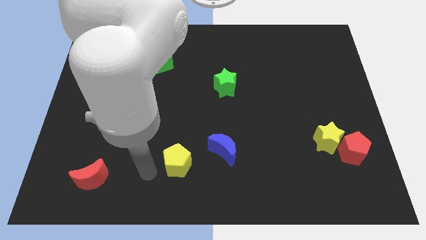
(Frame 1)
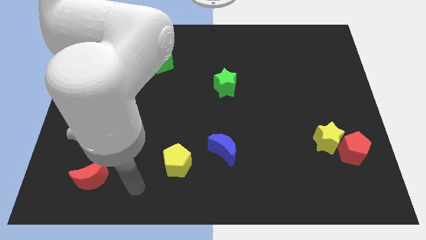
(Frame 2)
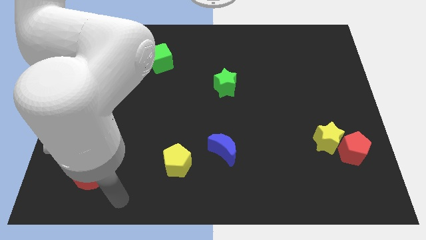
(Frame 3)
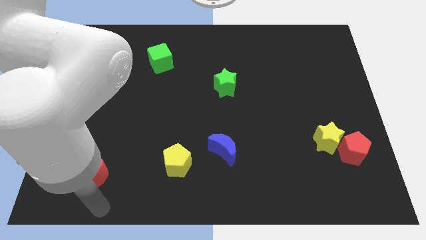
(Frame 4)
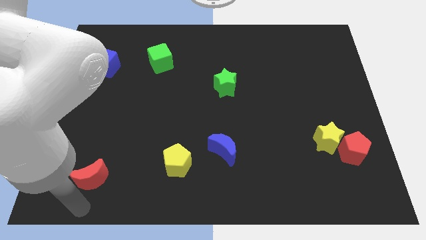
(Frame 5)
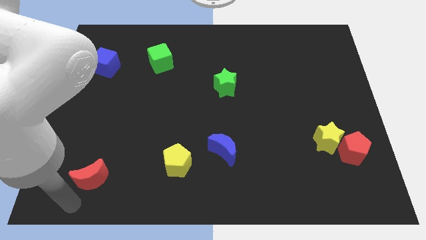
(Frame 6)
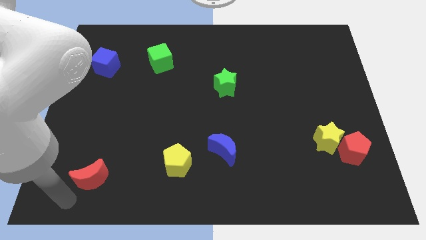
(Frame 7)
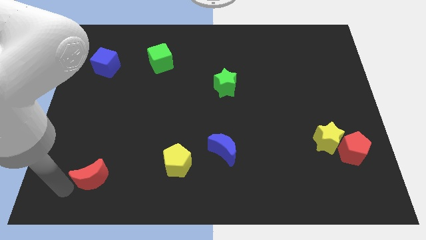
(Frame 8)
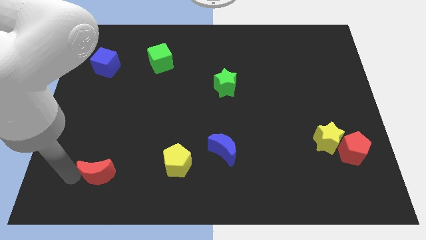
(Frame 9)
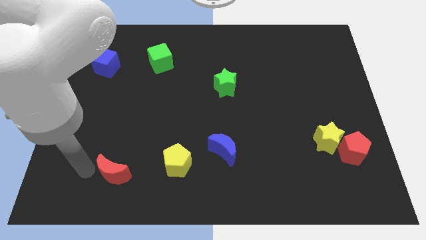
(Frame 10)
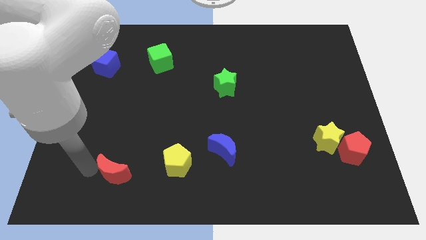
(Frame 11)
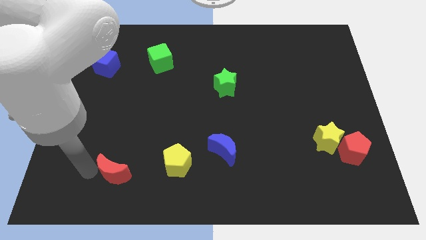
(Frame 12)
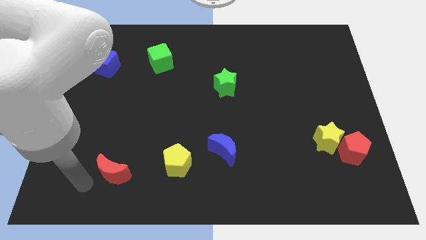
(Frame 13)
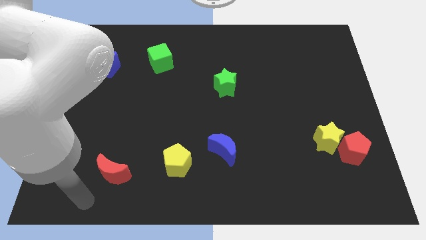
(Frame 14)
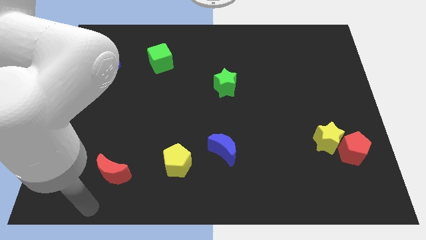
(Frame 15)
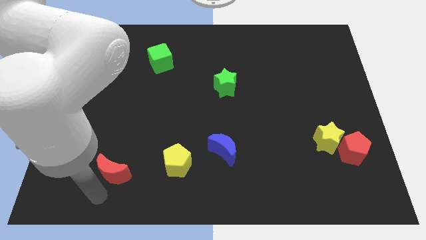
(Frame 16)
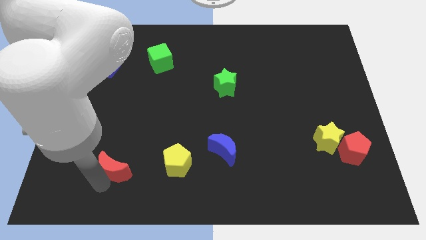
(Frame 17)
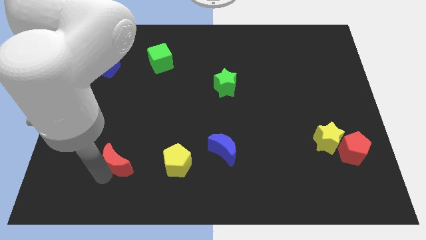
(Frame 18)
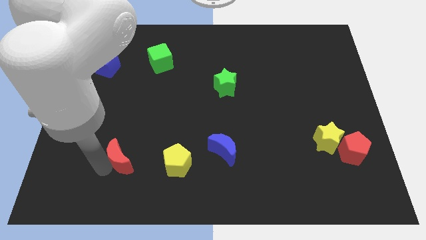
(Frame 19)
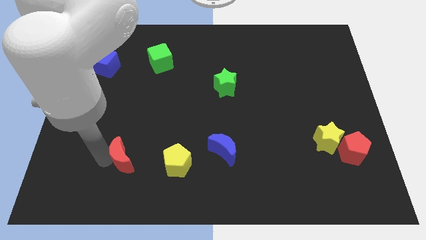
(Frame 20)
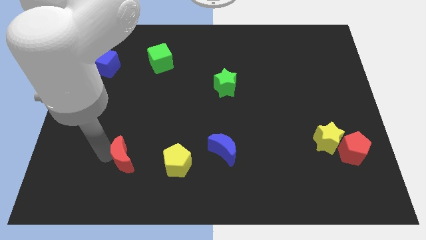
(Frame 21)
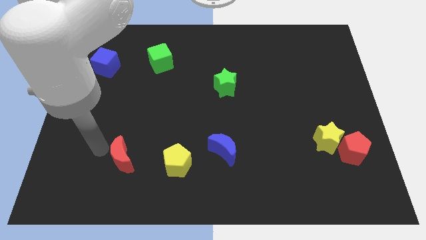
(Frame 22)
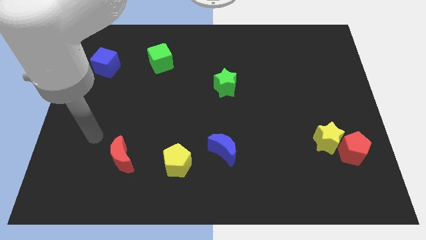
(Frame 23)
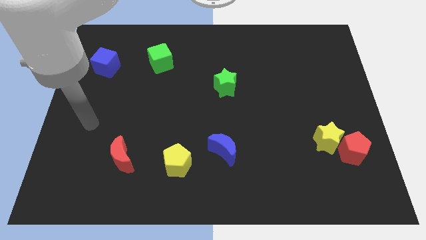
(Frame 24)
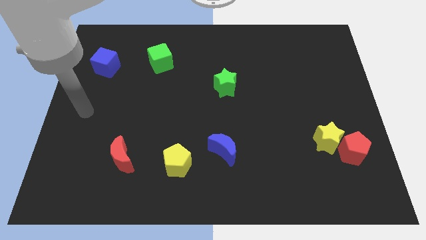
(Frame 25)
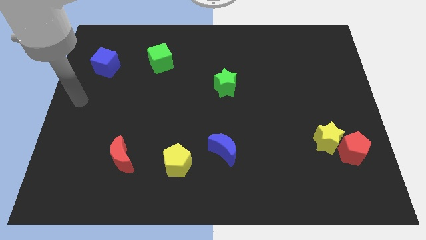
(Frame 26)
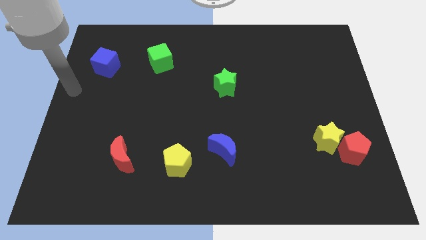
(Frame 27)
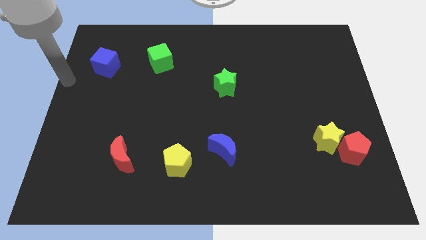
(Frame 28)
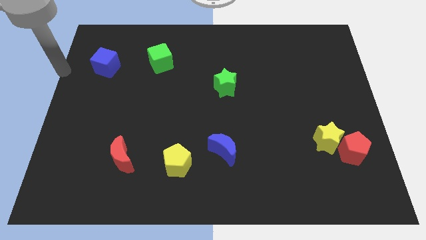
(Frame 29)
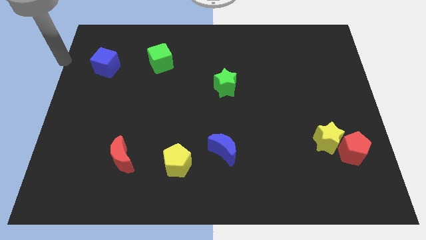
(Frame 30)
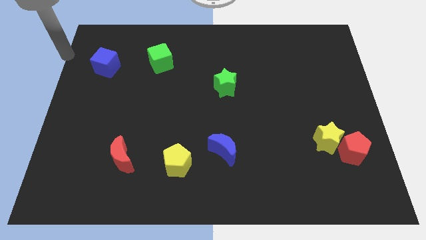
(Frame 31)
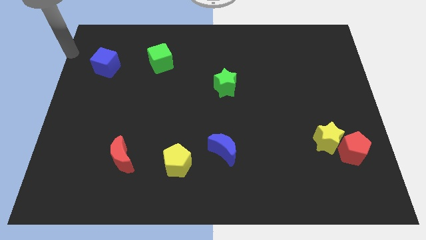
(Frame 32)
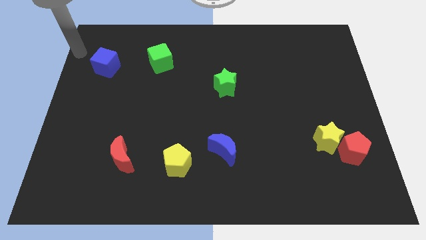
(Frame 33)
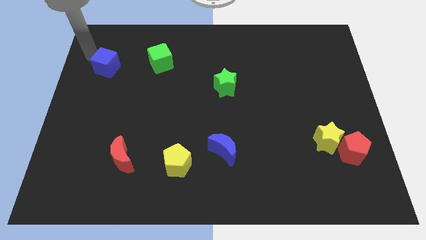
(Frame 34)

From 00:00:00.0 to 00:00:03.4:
slide the red crescent to the left side of the yellow pentagon

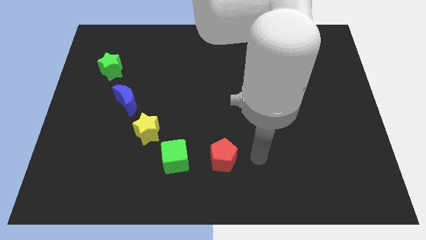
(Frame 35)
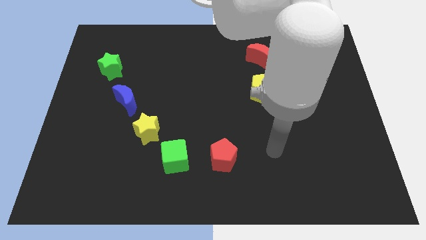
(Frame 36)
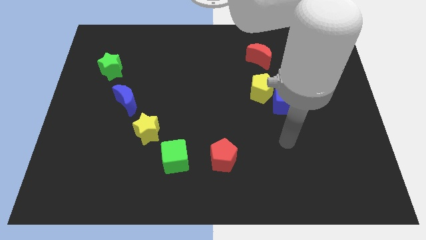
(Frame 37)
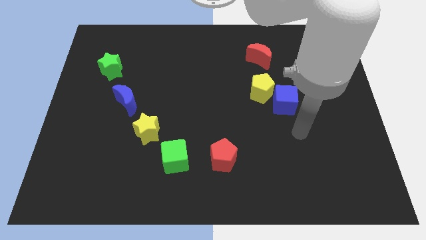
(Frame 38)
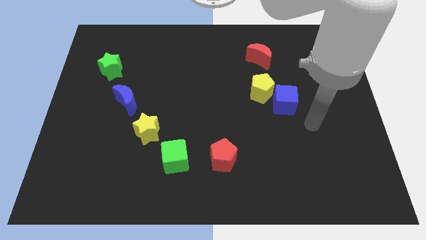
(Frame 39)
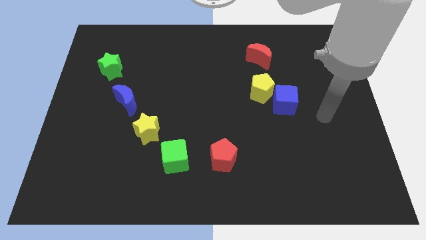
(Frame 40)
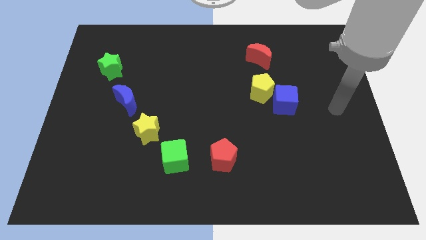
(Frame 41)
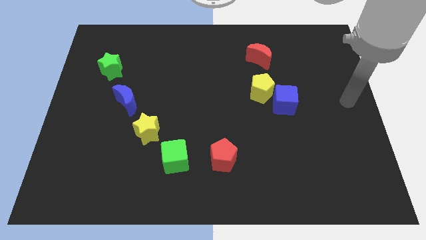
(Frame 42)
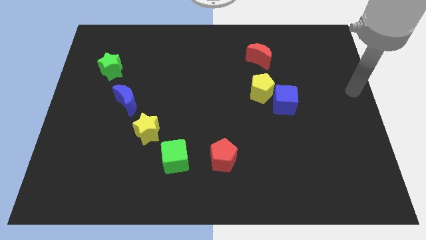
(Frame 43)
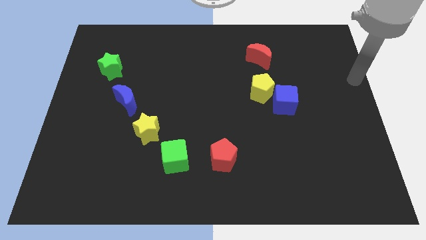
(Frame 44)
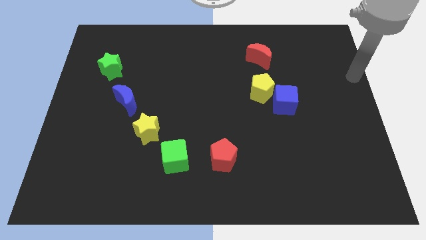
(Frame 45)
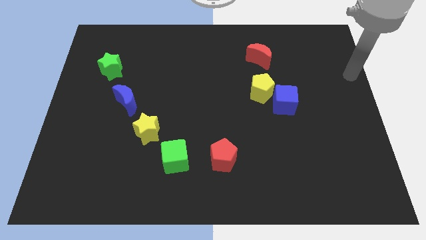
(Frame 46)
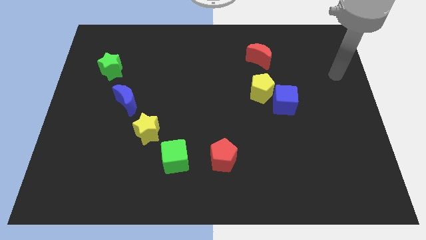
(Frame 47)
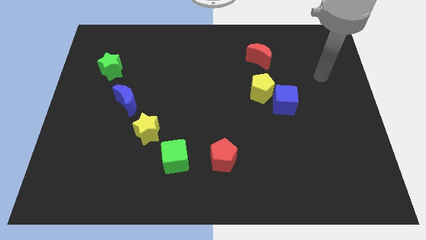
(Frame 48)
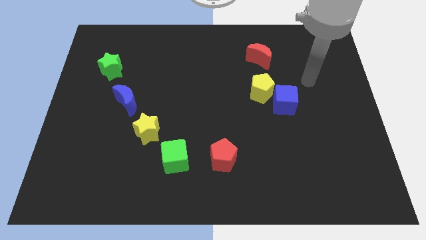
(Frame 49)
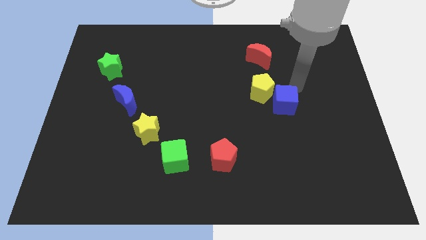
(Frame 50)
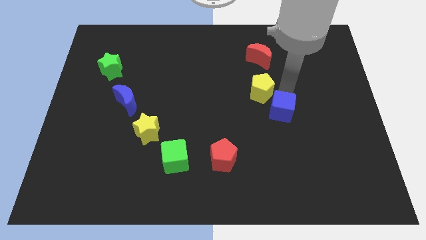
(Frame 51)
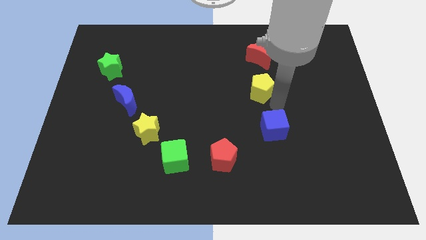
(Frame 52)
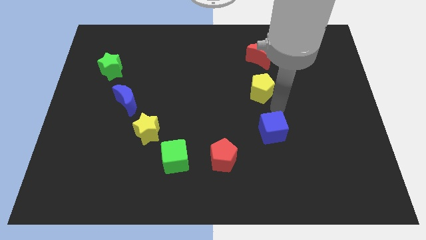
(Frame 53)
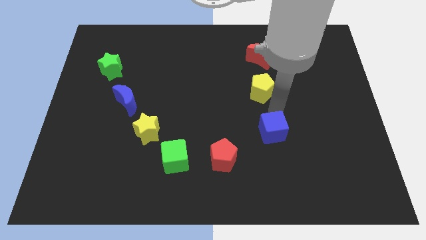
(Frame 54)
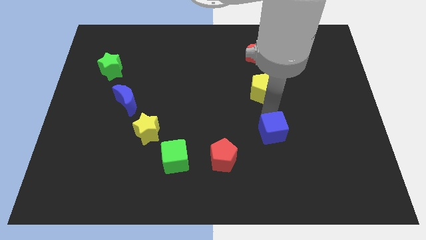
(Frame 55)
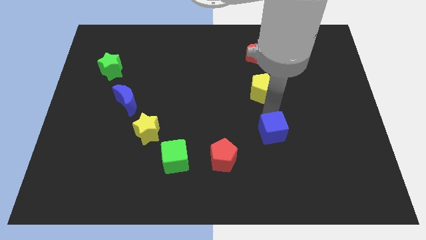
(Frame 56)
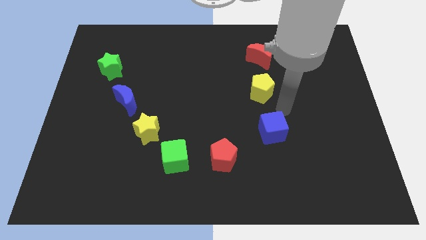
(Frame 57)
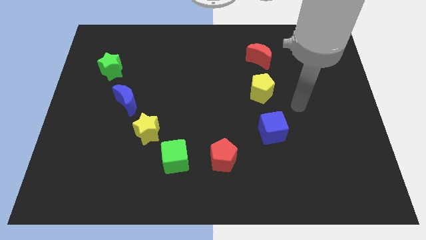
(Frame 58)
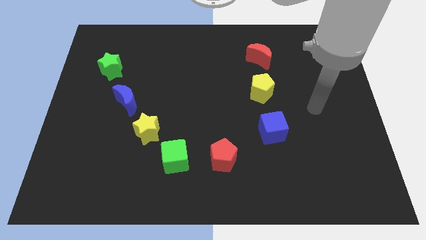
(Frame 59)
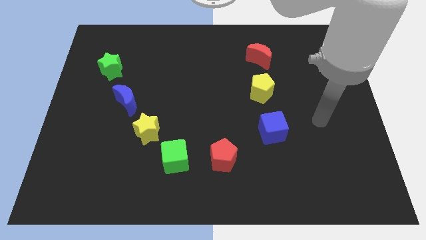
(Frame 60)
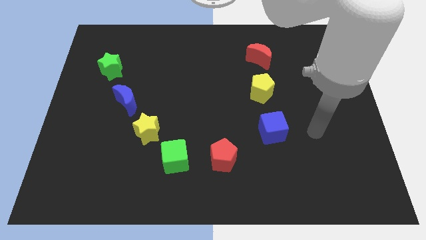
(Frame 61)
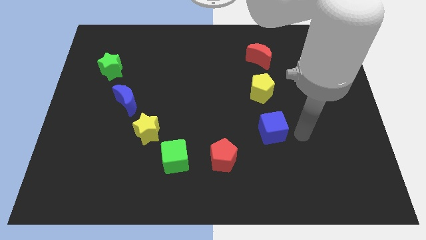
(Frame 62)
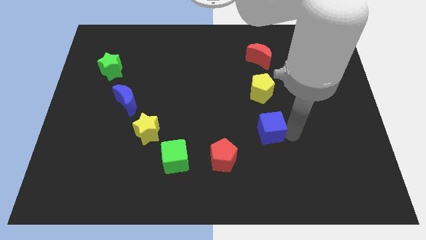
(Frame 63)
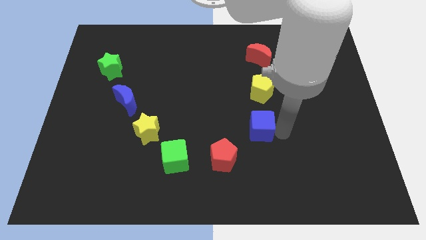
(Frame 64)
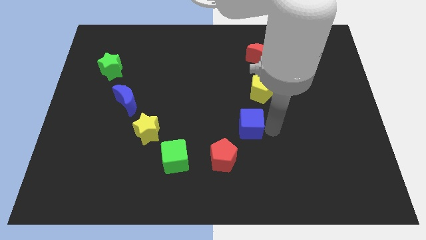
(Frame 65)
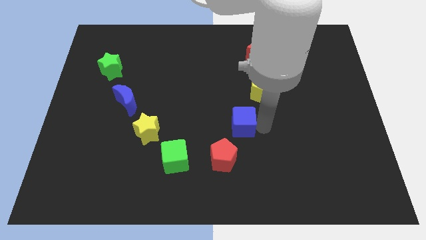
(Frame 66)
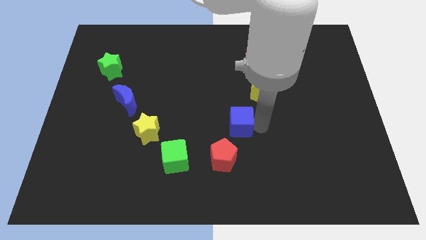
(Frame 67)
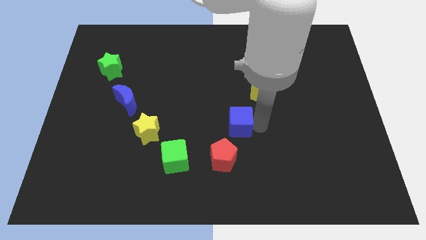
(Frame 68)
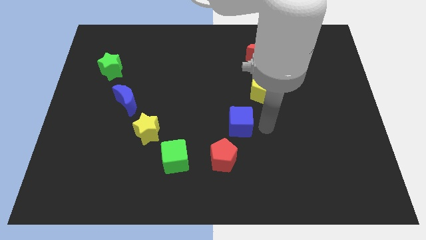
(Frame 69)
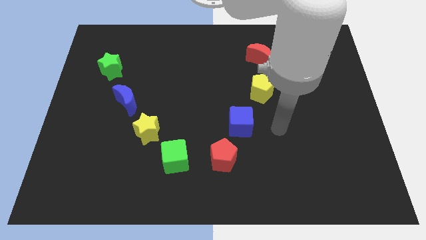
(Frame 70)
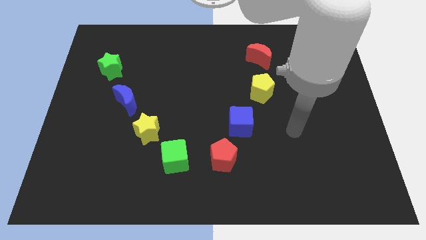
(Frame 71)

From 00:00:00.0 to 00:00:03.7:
place the blue cube in between the red pentagon and yellow pentagon

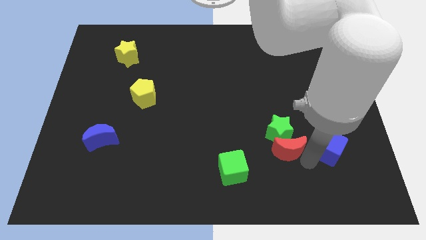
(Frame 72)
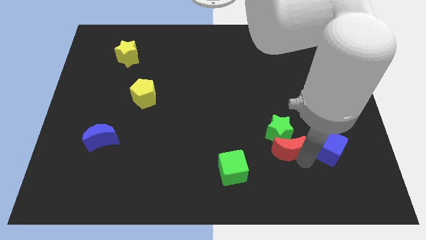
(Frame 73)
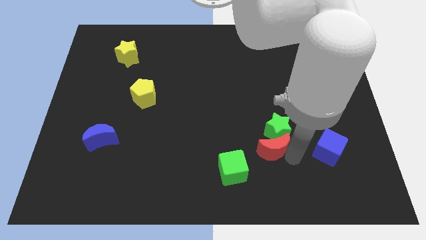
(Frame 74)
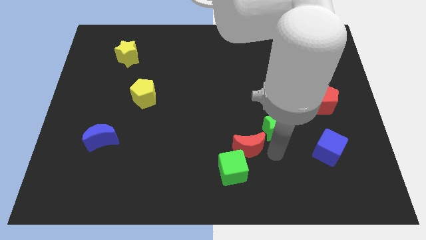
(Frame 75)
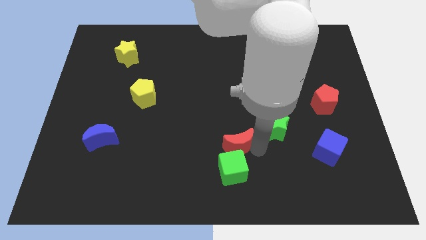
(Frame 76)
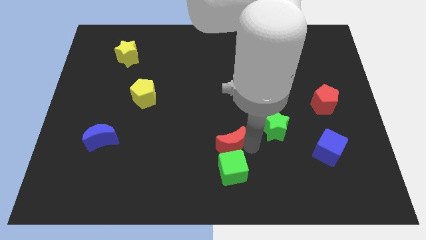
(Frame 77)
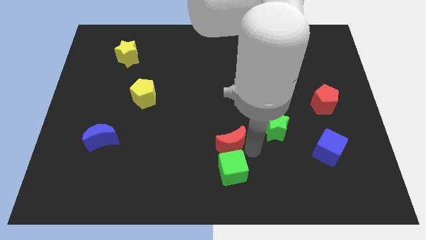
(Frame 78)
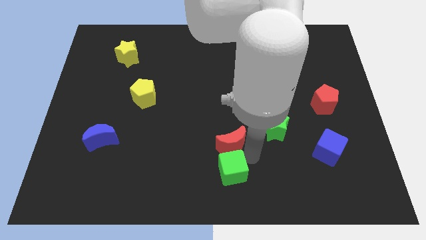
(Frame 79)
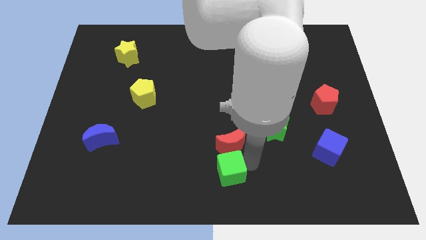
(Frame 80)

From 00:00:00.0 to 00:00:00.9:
slightly move the red moon to the top of the green cube

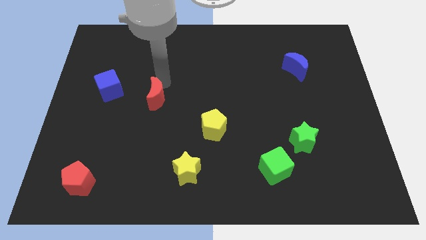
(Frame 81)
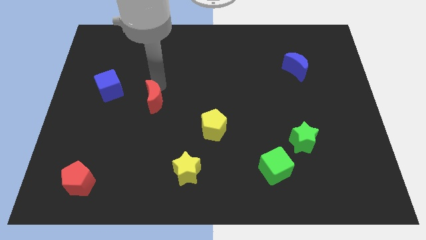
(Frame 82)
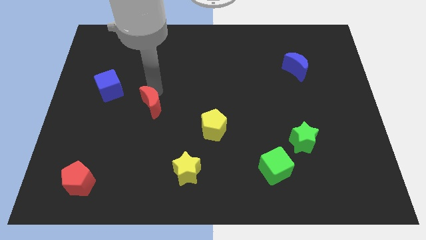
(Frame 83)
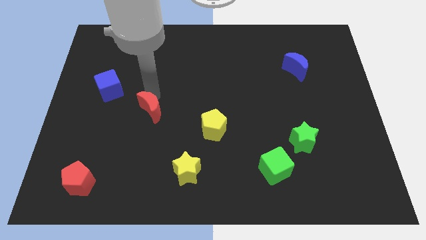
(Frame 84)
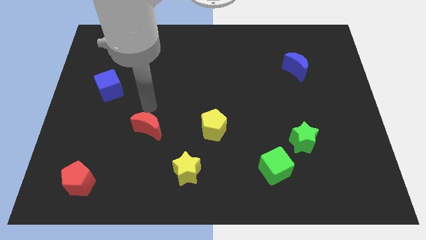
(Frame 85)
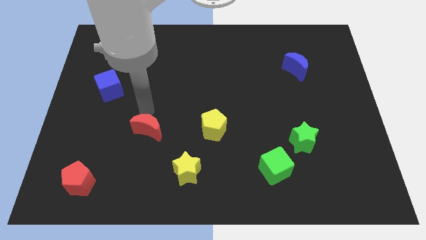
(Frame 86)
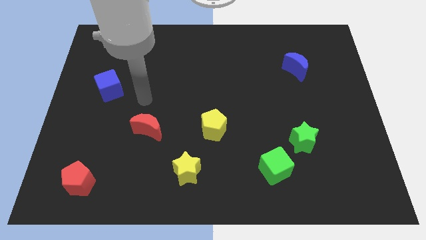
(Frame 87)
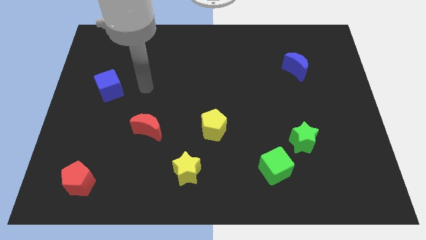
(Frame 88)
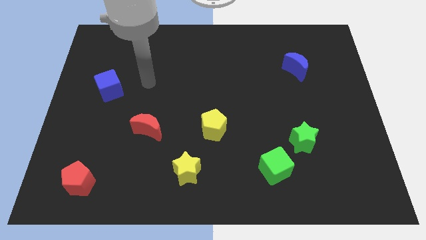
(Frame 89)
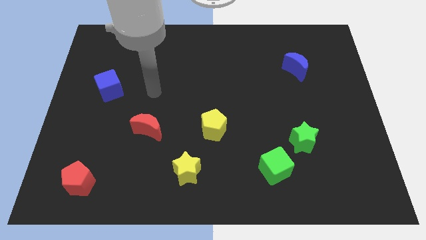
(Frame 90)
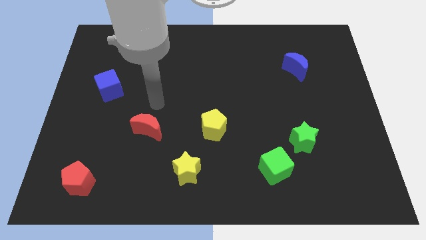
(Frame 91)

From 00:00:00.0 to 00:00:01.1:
push red crescent downwards
